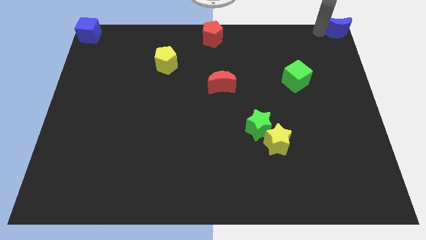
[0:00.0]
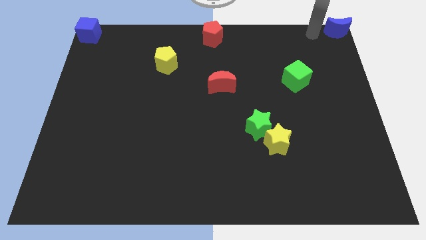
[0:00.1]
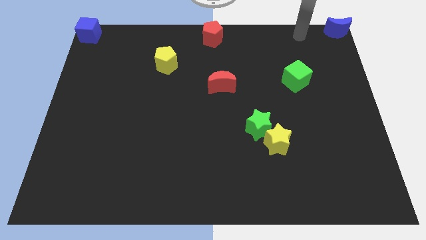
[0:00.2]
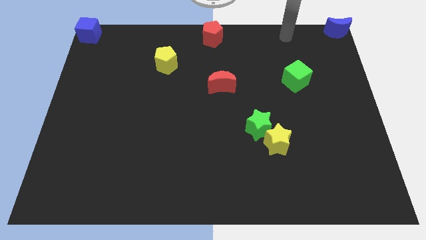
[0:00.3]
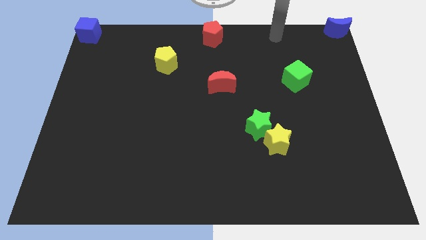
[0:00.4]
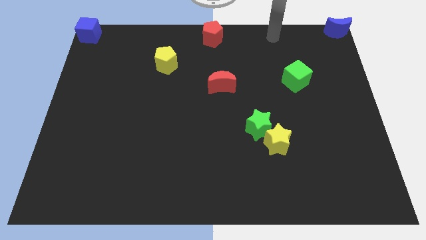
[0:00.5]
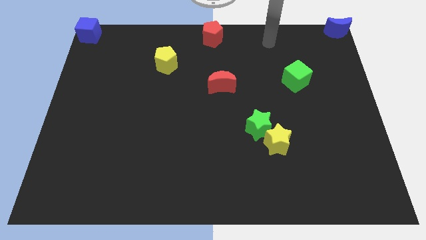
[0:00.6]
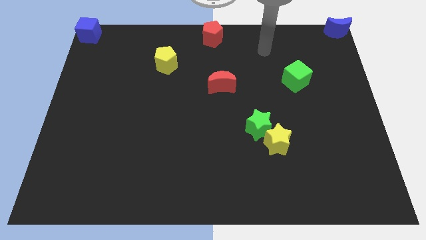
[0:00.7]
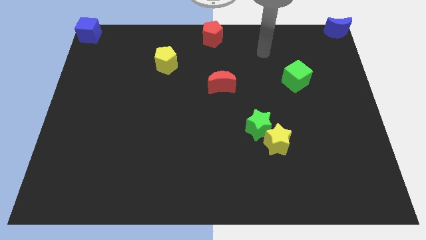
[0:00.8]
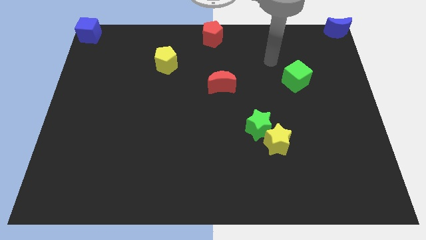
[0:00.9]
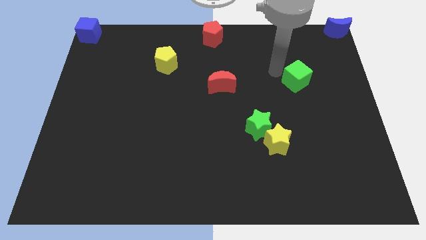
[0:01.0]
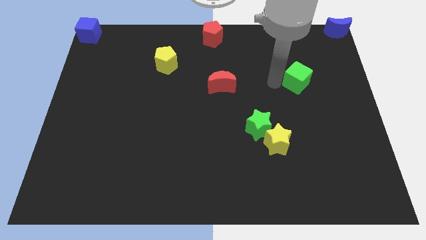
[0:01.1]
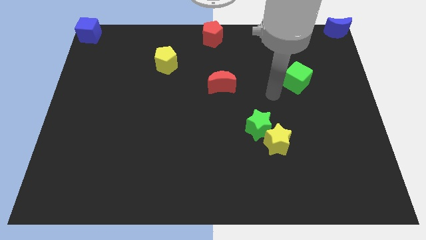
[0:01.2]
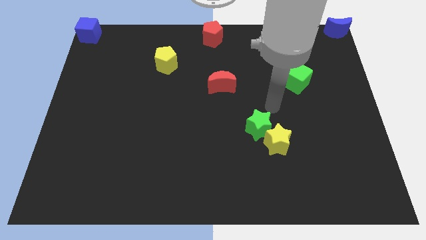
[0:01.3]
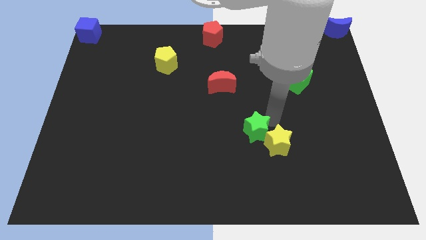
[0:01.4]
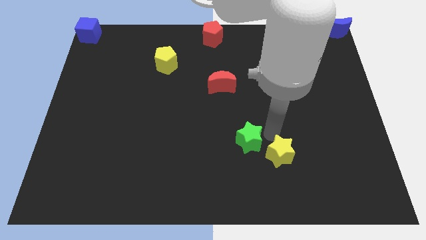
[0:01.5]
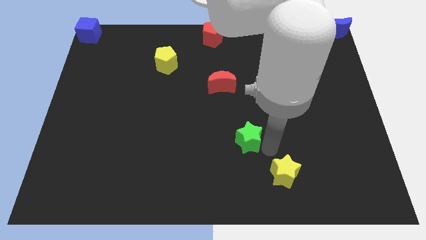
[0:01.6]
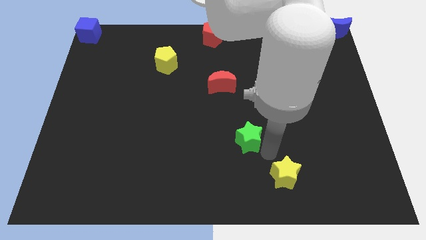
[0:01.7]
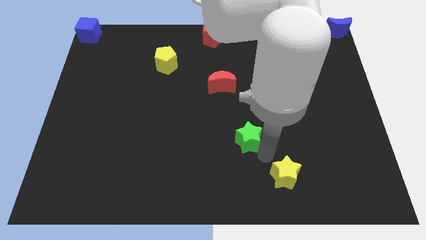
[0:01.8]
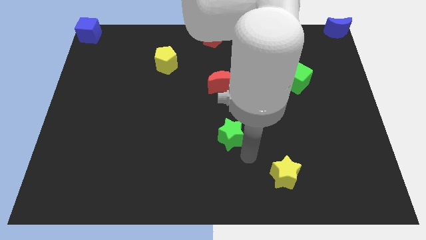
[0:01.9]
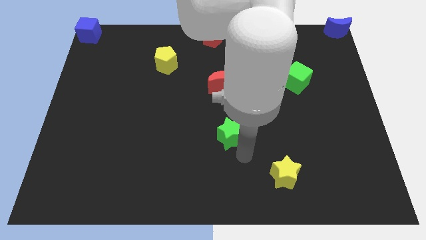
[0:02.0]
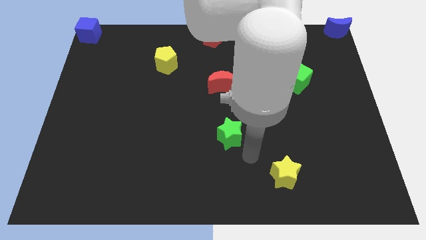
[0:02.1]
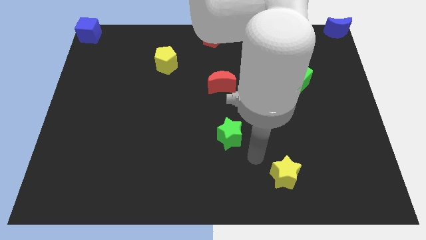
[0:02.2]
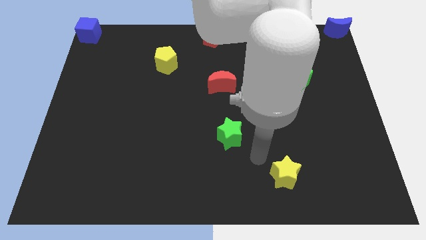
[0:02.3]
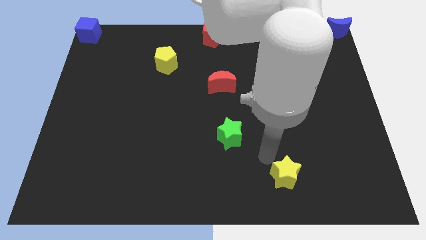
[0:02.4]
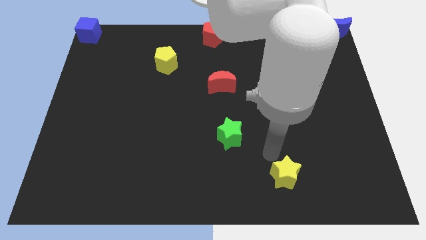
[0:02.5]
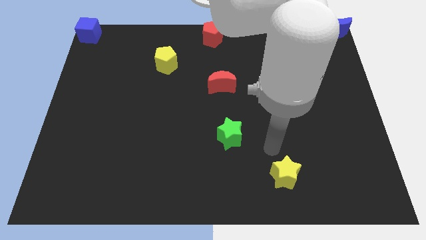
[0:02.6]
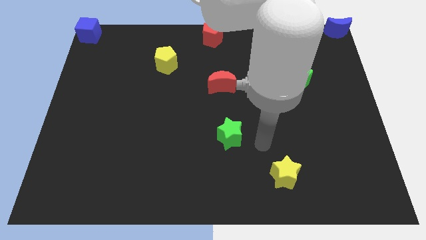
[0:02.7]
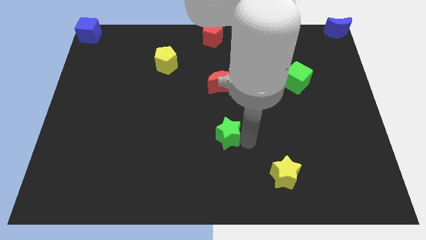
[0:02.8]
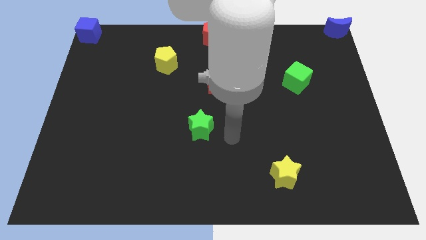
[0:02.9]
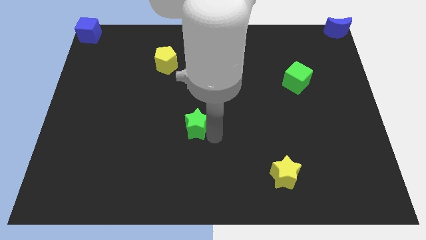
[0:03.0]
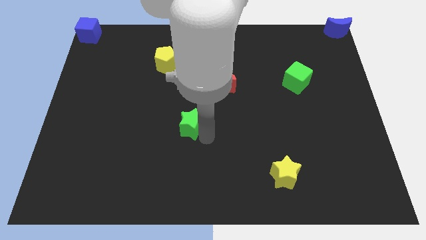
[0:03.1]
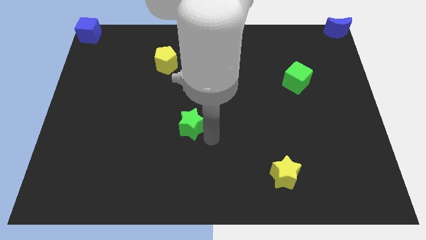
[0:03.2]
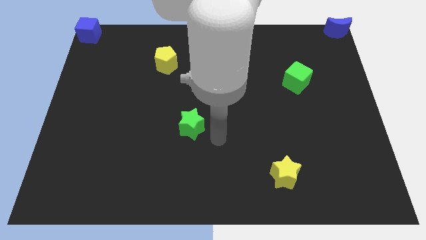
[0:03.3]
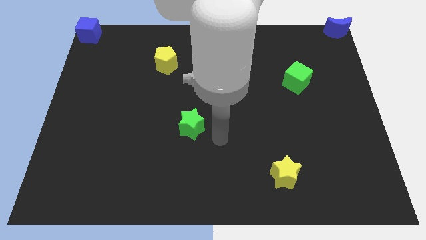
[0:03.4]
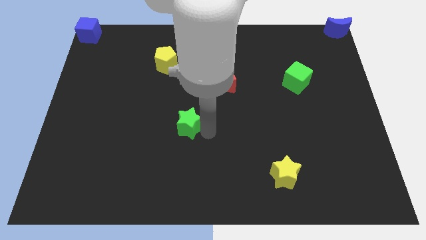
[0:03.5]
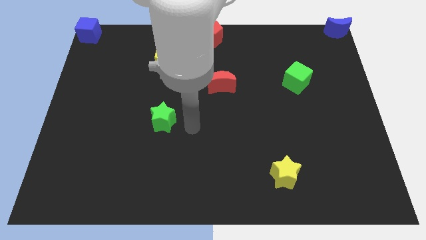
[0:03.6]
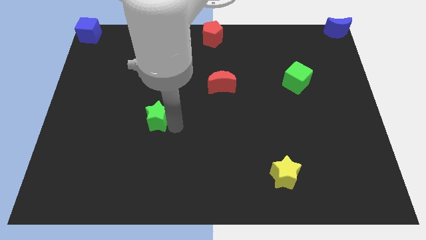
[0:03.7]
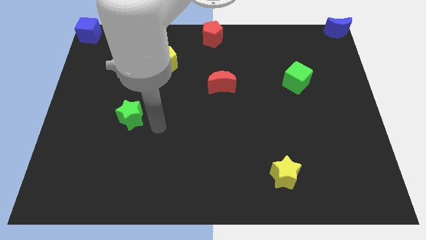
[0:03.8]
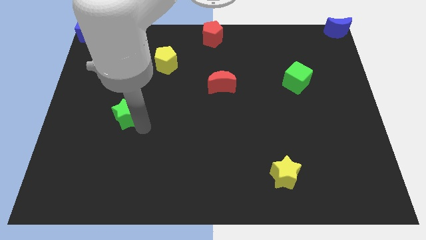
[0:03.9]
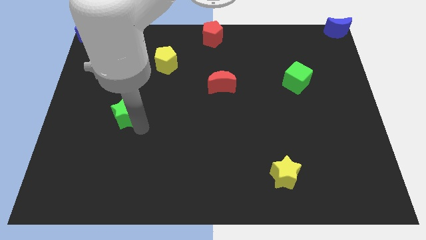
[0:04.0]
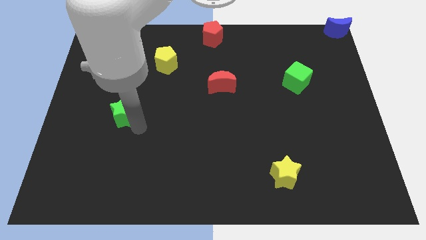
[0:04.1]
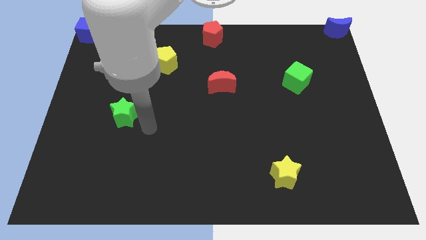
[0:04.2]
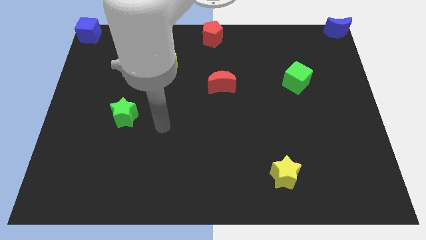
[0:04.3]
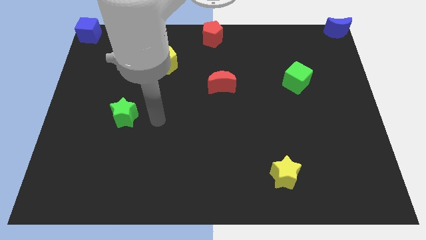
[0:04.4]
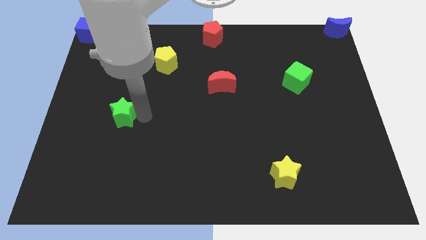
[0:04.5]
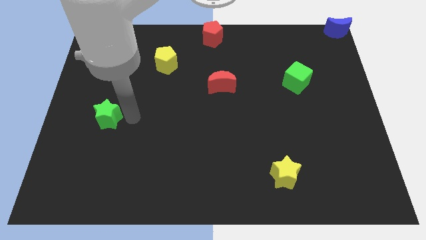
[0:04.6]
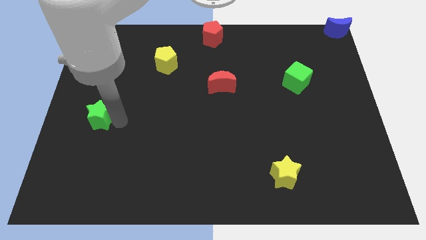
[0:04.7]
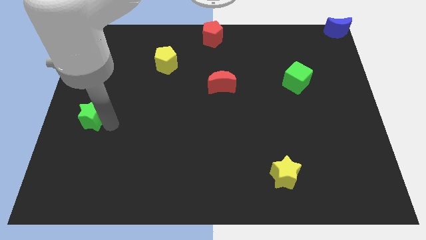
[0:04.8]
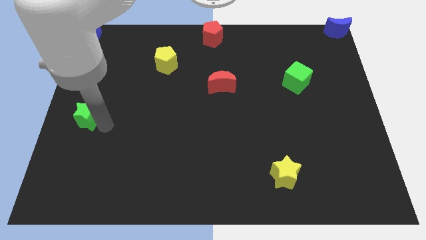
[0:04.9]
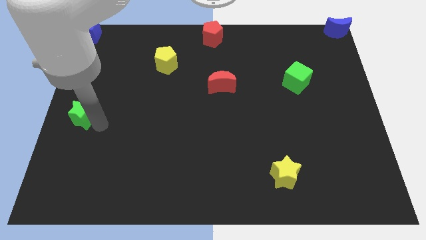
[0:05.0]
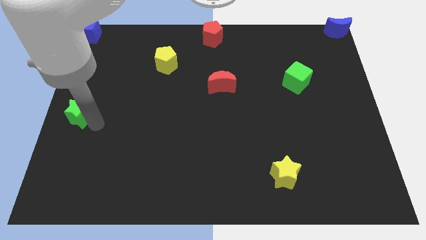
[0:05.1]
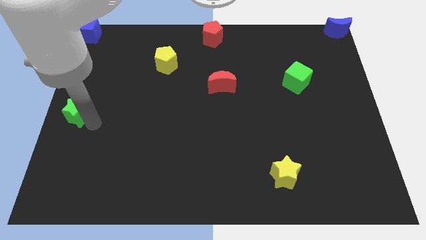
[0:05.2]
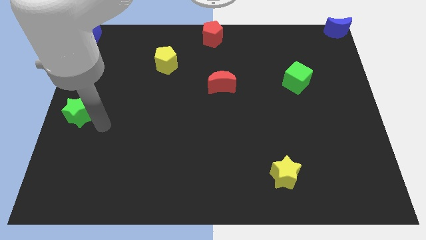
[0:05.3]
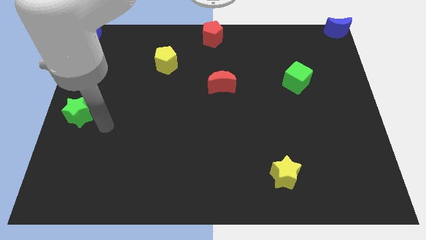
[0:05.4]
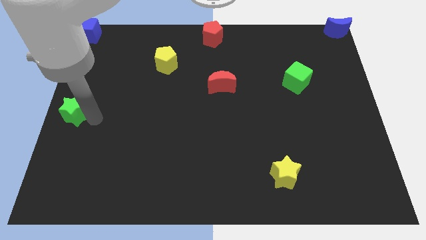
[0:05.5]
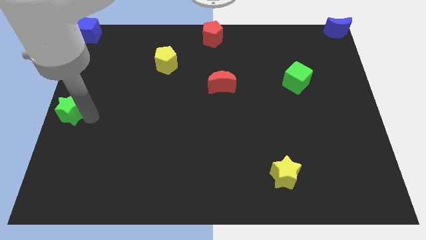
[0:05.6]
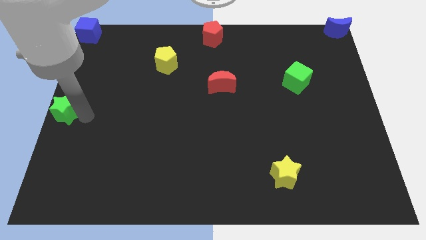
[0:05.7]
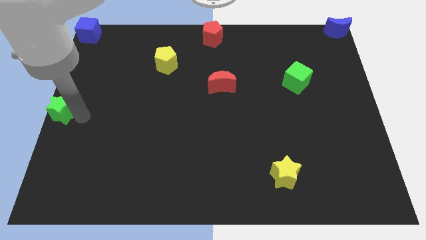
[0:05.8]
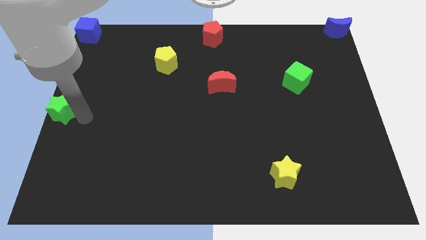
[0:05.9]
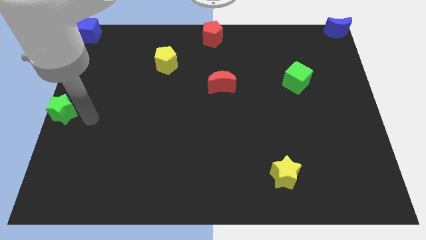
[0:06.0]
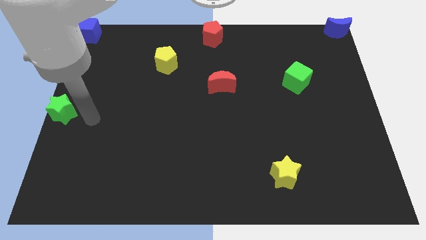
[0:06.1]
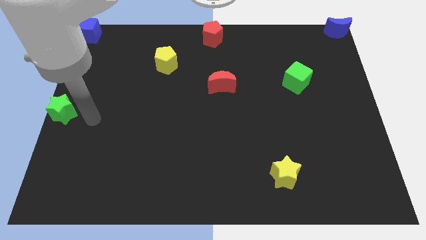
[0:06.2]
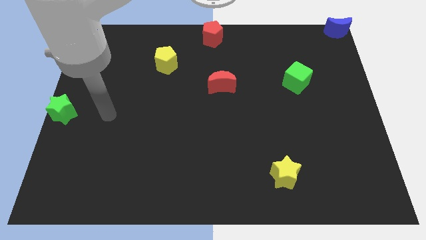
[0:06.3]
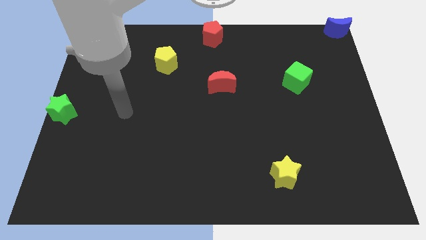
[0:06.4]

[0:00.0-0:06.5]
place the yellow star towards left center of the board

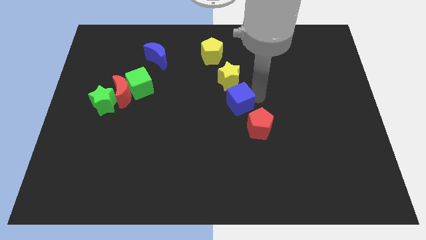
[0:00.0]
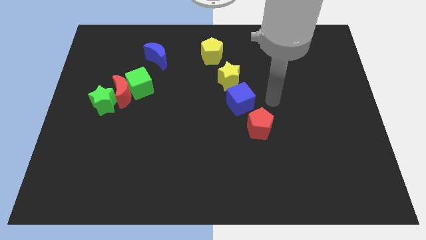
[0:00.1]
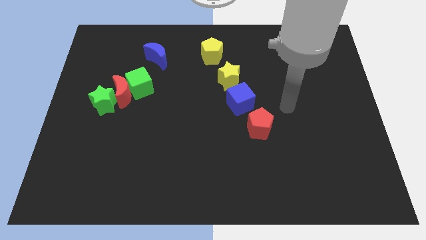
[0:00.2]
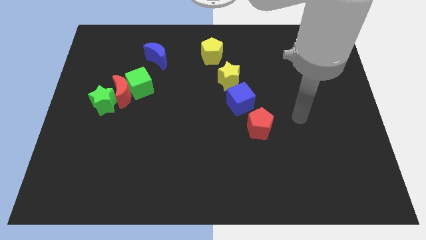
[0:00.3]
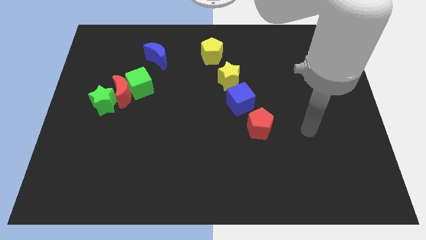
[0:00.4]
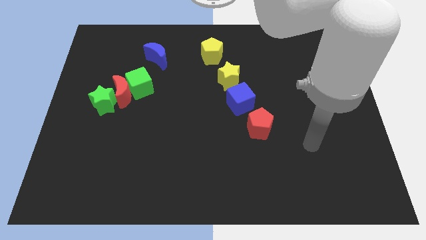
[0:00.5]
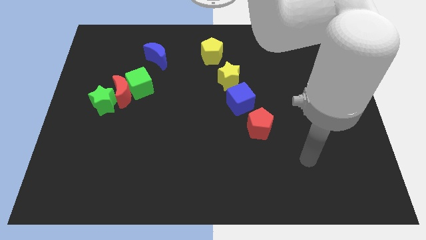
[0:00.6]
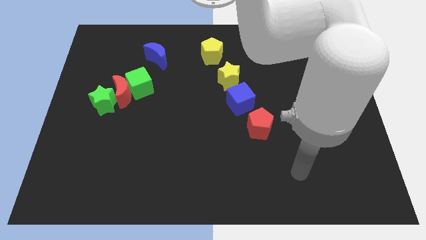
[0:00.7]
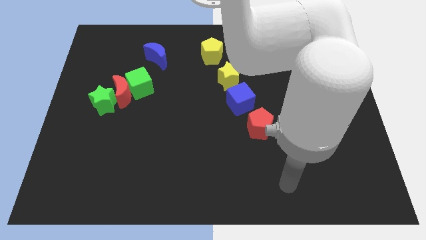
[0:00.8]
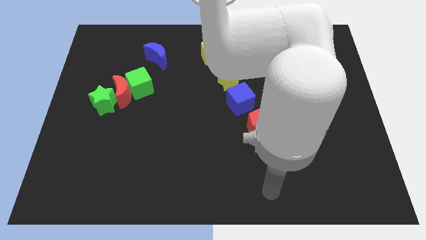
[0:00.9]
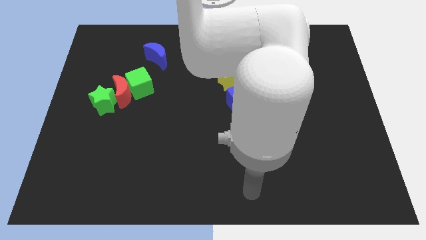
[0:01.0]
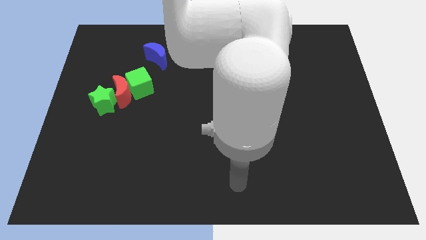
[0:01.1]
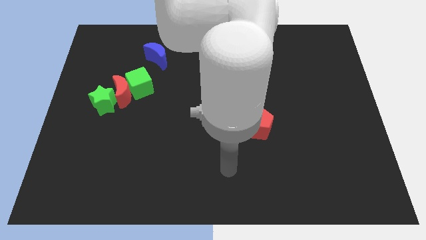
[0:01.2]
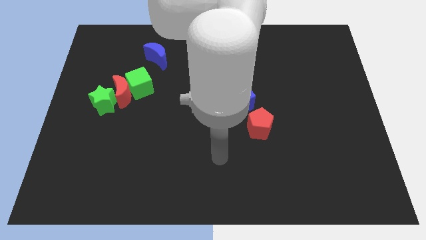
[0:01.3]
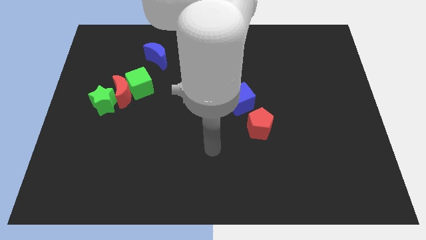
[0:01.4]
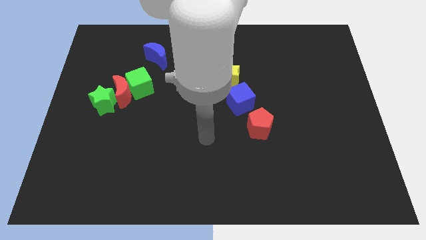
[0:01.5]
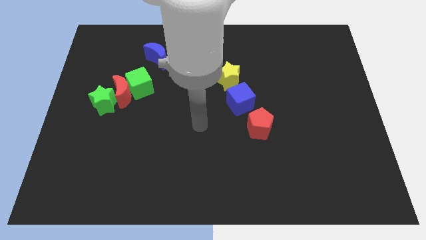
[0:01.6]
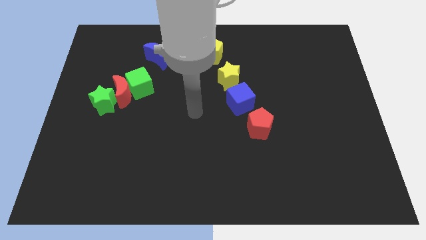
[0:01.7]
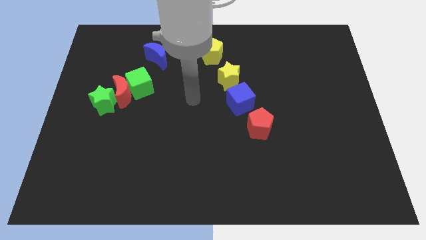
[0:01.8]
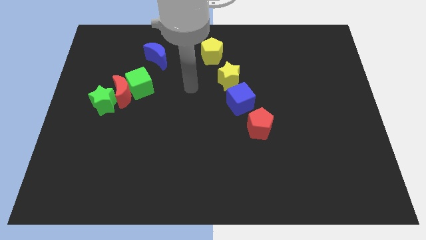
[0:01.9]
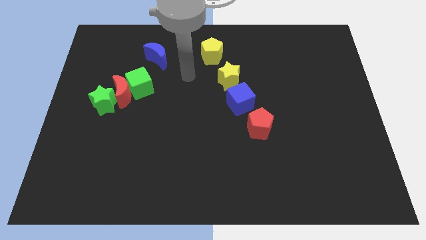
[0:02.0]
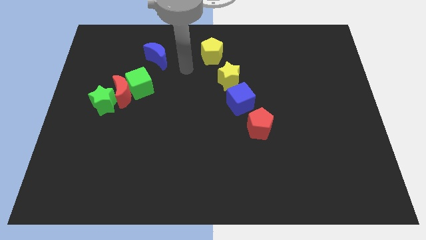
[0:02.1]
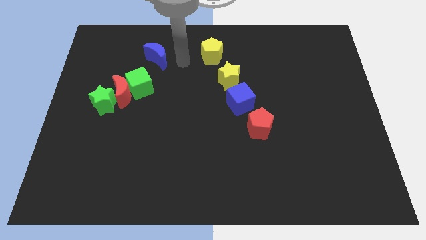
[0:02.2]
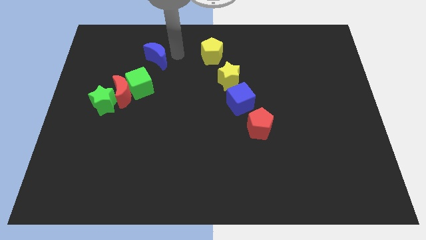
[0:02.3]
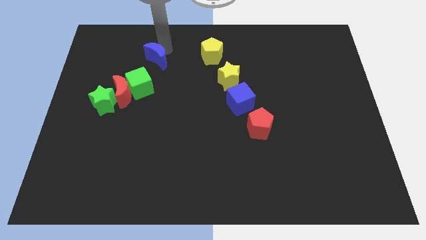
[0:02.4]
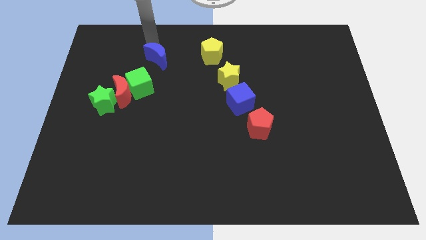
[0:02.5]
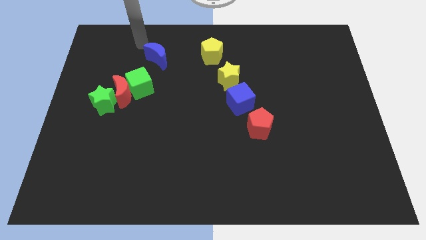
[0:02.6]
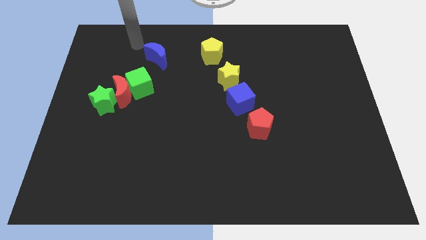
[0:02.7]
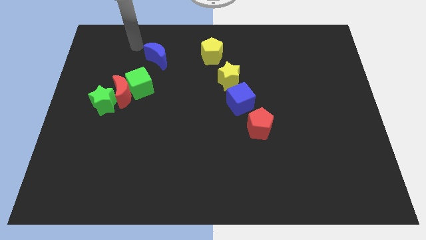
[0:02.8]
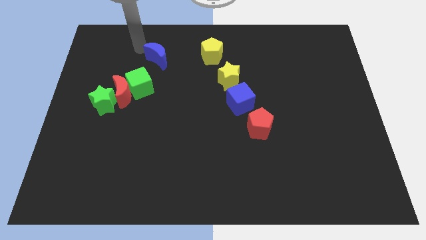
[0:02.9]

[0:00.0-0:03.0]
move the arm towards the left top of the blue moon
